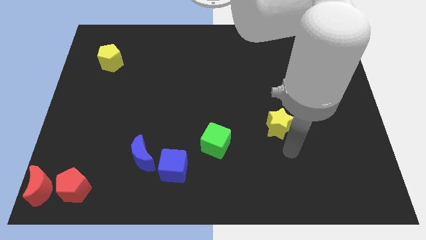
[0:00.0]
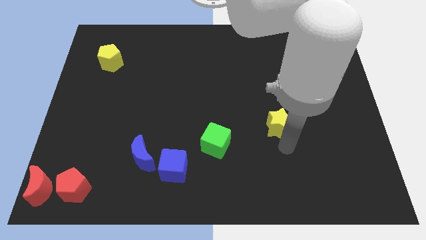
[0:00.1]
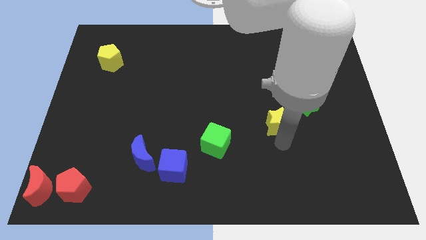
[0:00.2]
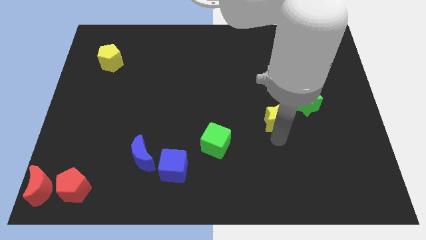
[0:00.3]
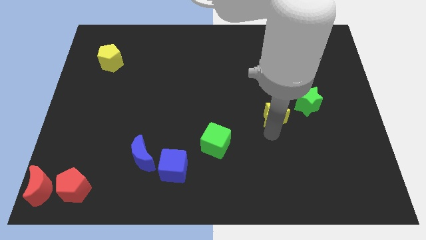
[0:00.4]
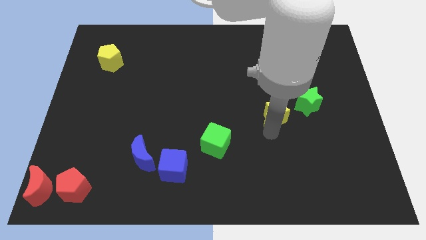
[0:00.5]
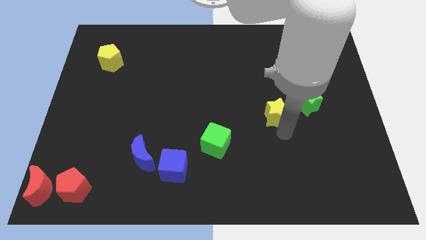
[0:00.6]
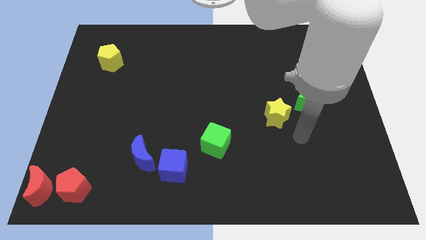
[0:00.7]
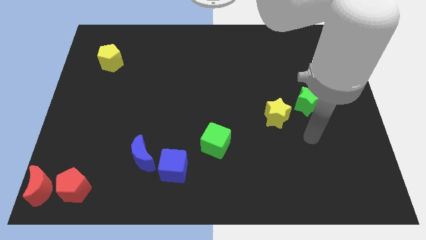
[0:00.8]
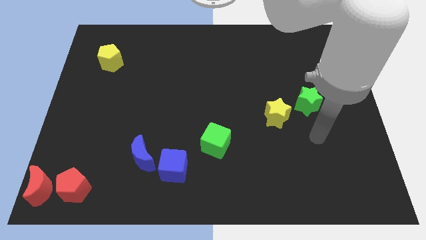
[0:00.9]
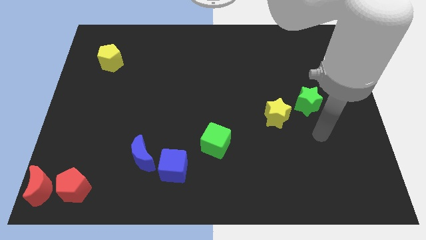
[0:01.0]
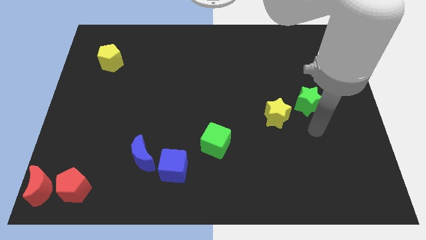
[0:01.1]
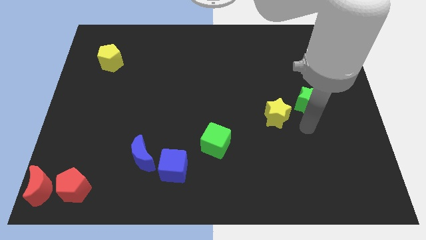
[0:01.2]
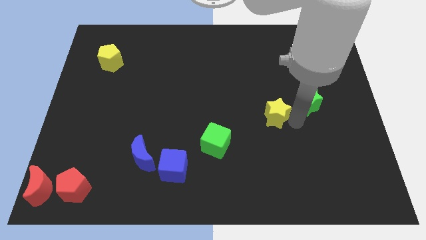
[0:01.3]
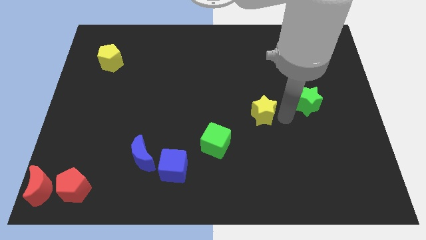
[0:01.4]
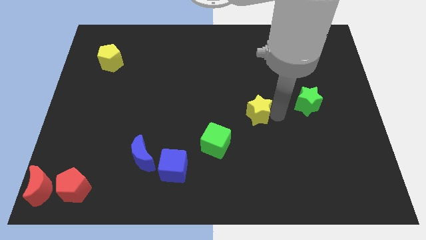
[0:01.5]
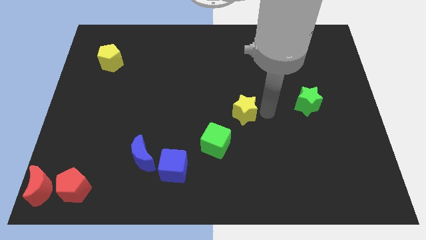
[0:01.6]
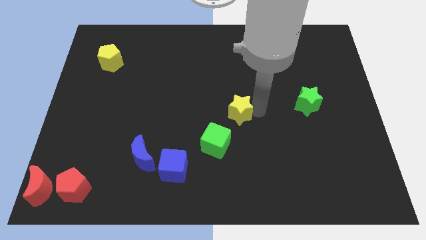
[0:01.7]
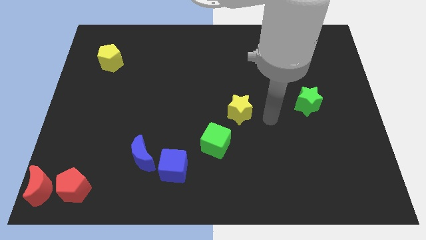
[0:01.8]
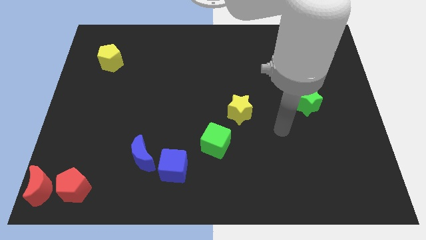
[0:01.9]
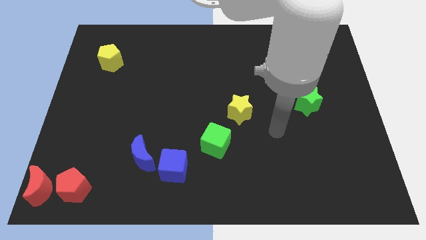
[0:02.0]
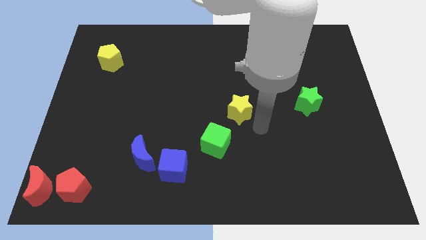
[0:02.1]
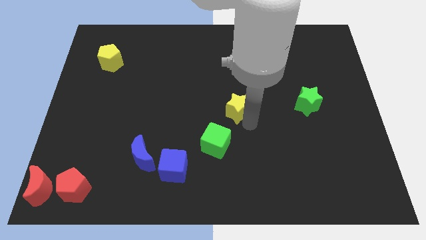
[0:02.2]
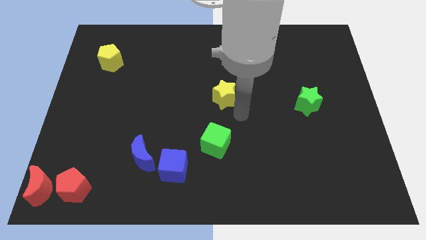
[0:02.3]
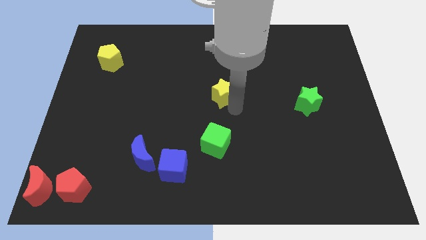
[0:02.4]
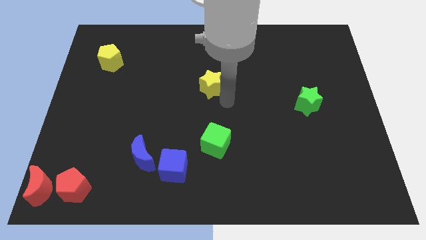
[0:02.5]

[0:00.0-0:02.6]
move the yellow star to the top side of the green cube

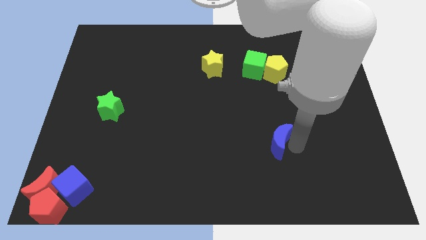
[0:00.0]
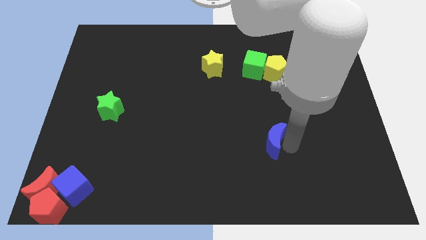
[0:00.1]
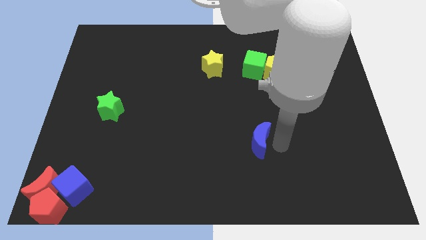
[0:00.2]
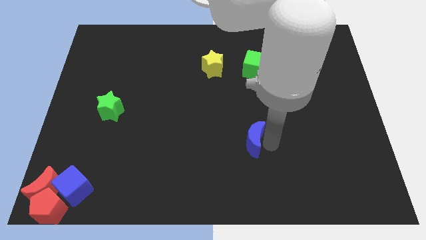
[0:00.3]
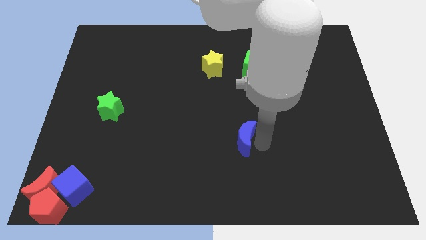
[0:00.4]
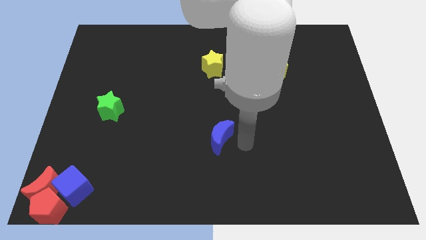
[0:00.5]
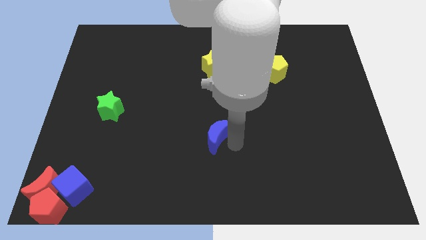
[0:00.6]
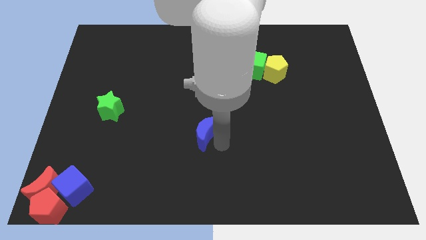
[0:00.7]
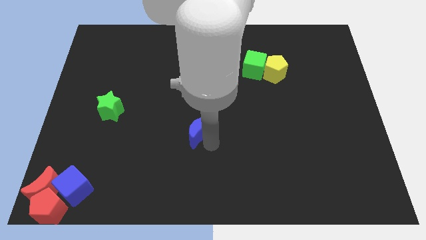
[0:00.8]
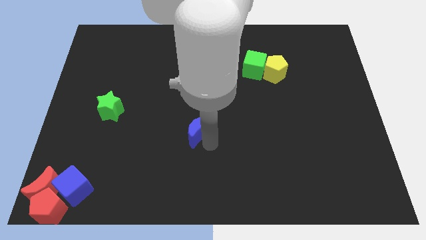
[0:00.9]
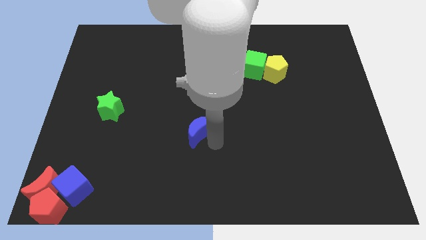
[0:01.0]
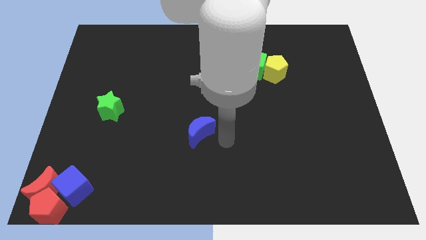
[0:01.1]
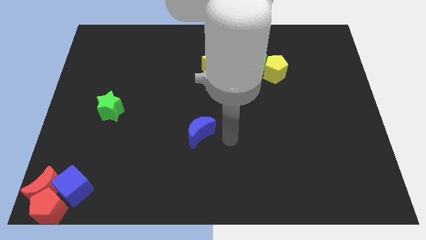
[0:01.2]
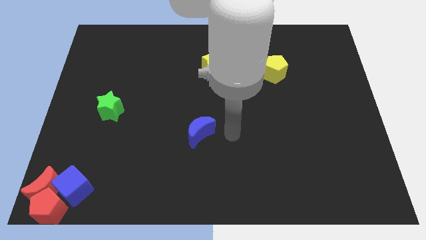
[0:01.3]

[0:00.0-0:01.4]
place the blue crescent at the center of the board

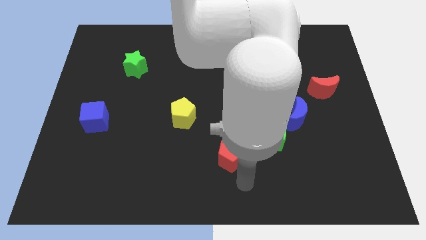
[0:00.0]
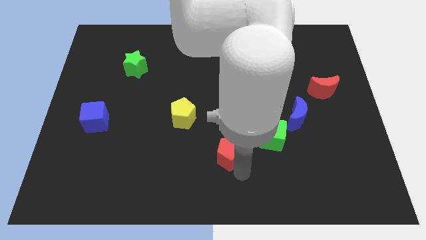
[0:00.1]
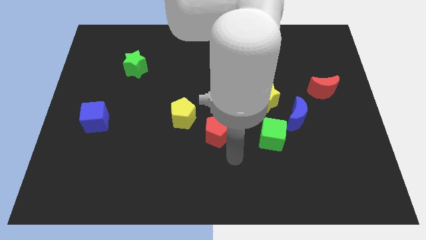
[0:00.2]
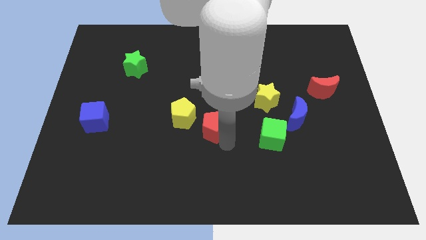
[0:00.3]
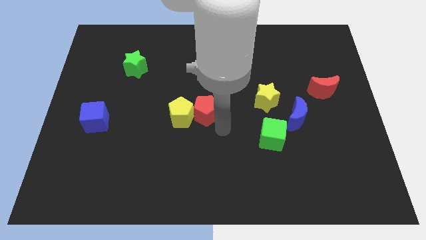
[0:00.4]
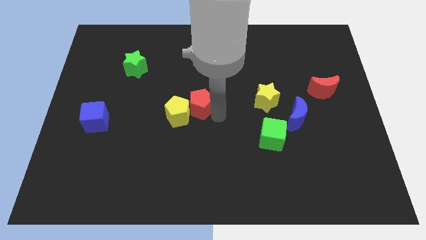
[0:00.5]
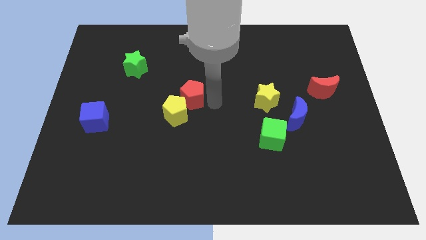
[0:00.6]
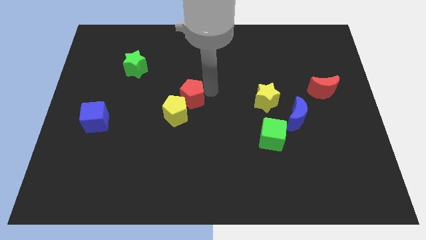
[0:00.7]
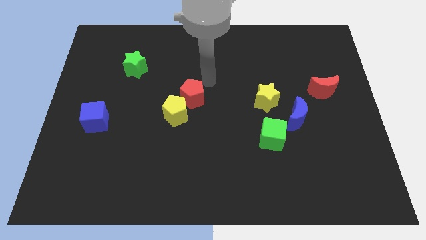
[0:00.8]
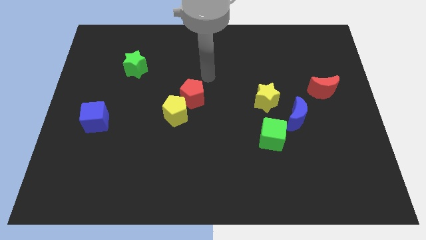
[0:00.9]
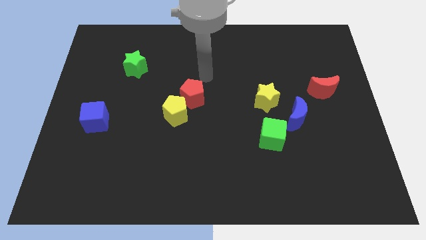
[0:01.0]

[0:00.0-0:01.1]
slide red pentagon into yellow pentagon

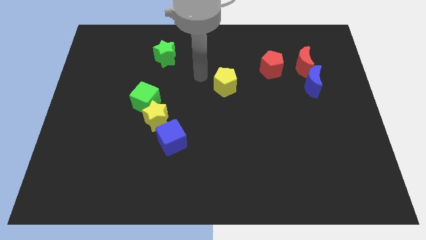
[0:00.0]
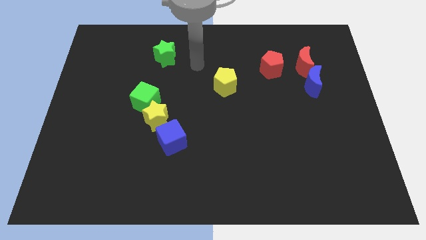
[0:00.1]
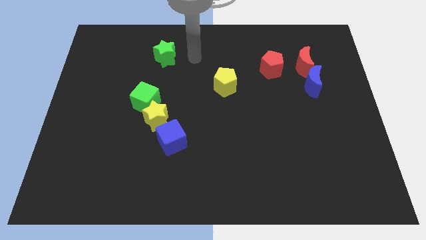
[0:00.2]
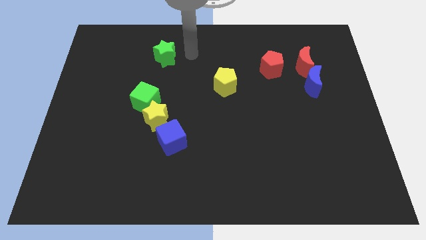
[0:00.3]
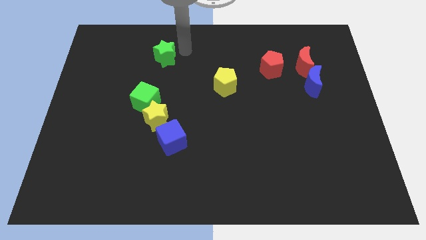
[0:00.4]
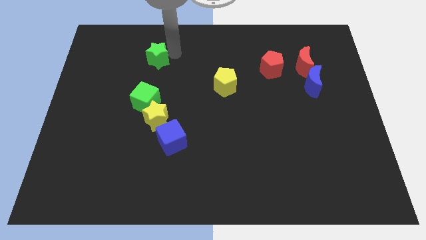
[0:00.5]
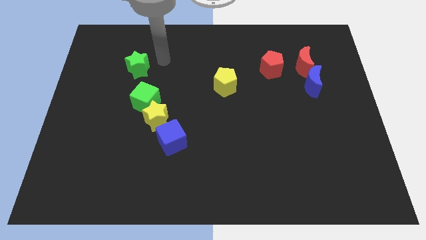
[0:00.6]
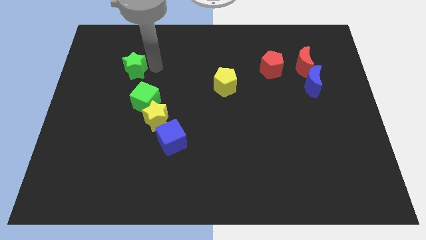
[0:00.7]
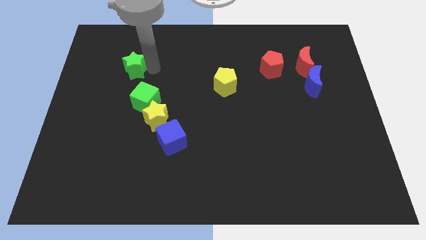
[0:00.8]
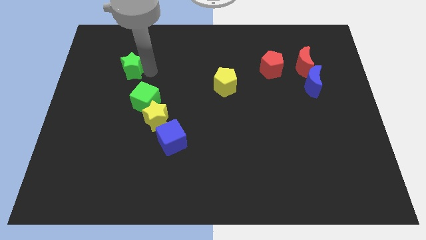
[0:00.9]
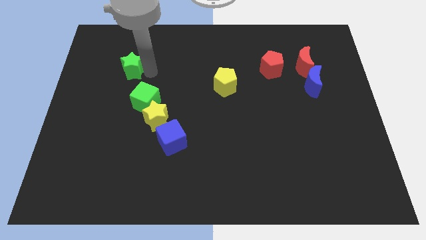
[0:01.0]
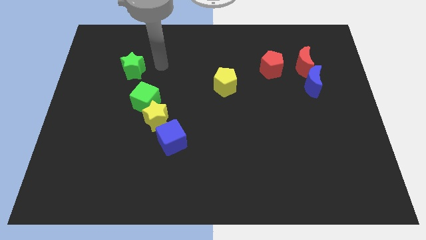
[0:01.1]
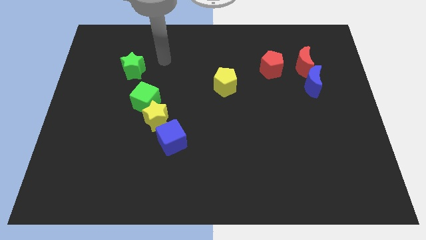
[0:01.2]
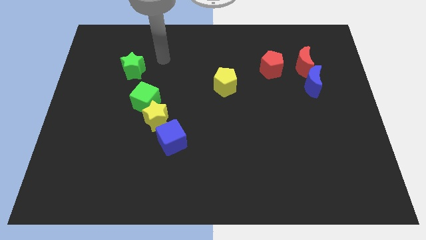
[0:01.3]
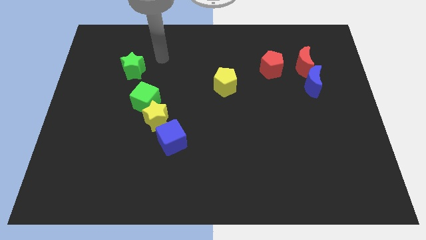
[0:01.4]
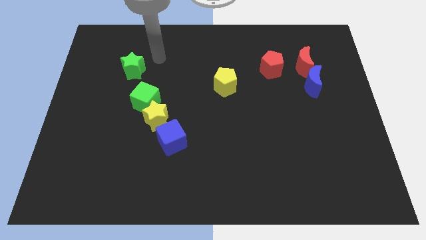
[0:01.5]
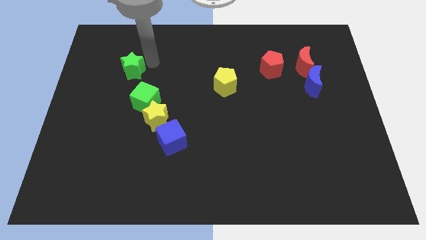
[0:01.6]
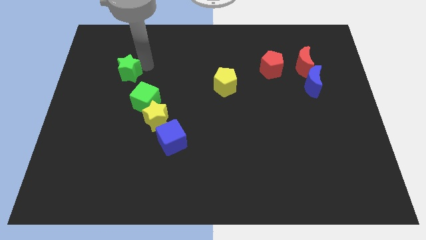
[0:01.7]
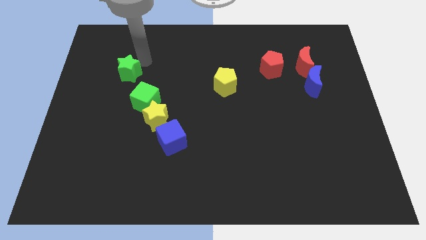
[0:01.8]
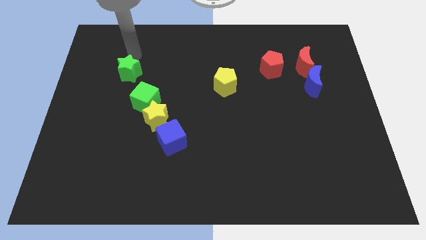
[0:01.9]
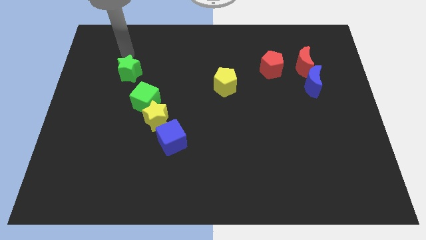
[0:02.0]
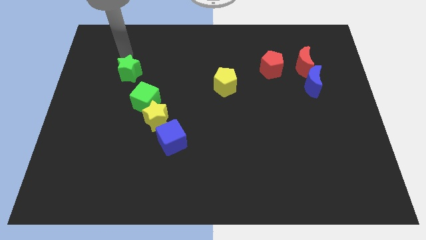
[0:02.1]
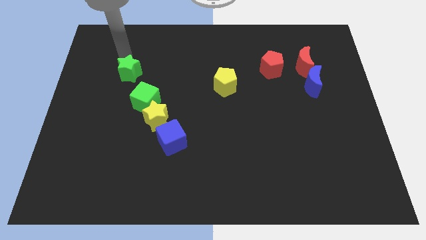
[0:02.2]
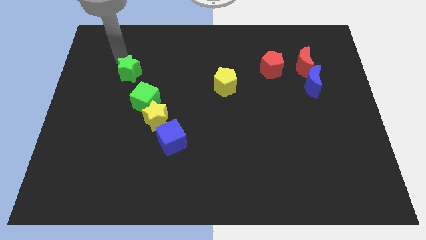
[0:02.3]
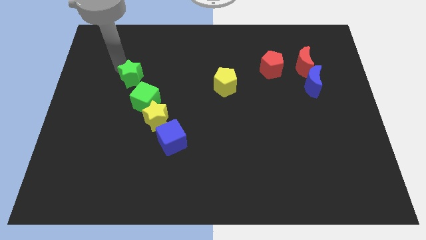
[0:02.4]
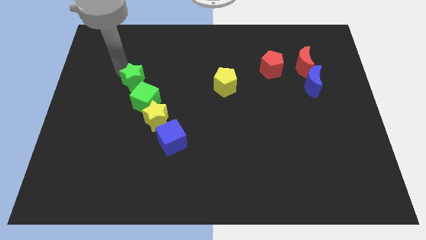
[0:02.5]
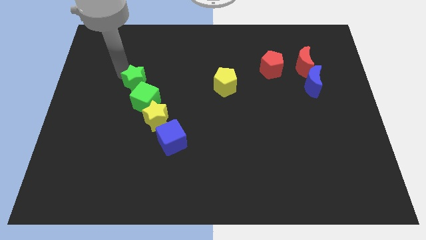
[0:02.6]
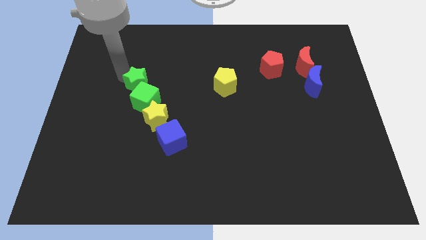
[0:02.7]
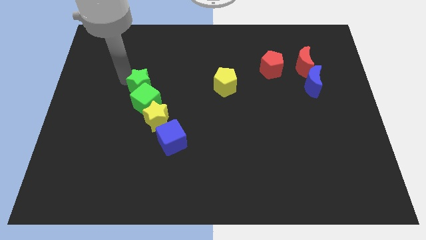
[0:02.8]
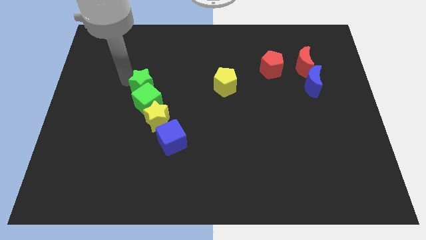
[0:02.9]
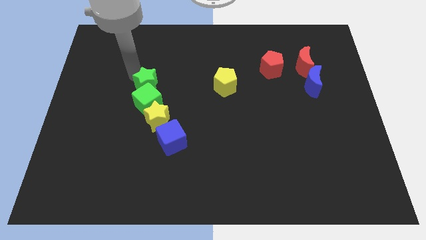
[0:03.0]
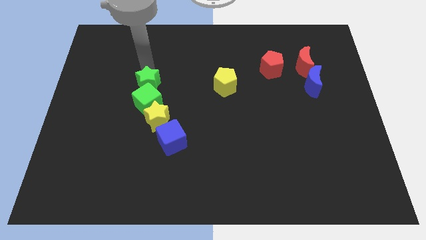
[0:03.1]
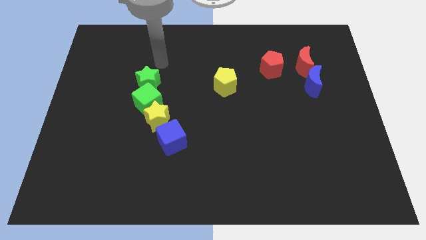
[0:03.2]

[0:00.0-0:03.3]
place the green star on the top of green cube

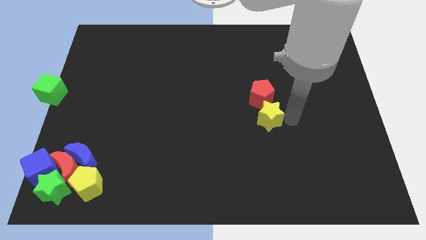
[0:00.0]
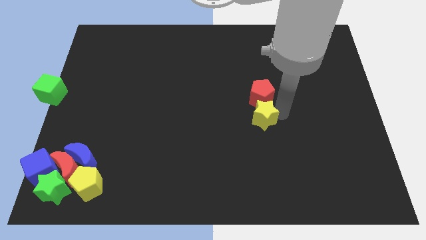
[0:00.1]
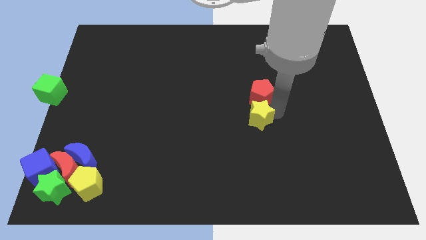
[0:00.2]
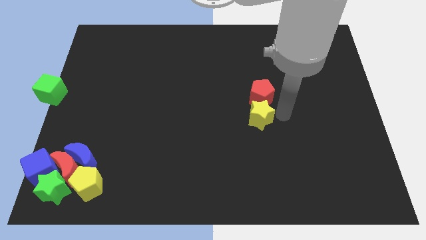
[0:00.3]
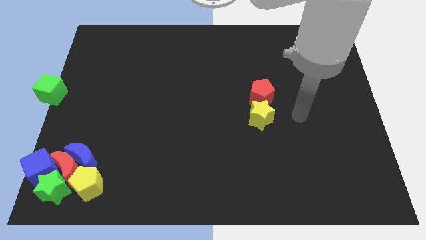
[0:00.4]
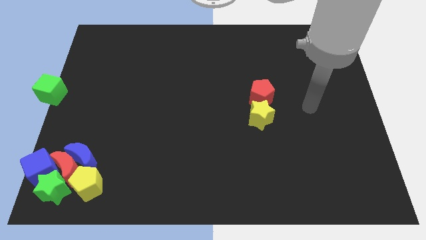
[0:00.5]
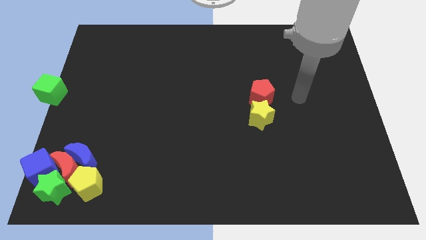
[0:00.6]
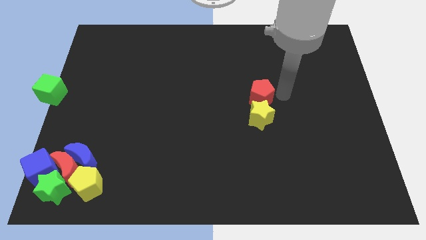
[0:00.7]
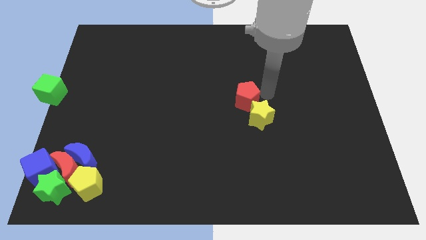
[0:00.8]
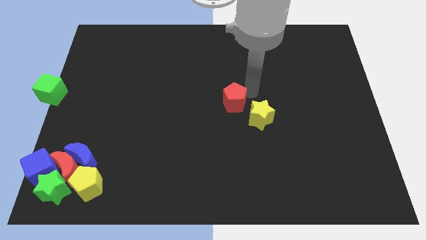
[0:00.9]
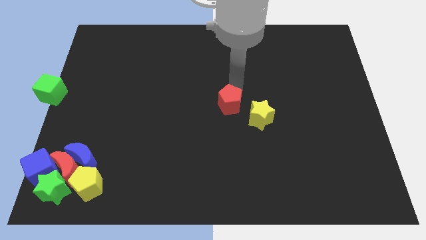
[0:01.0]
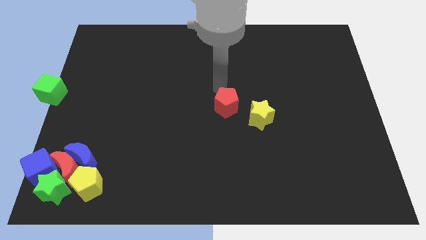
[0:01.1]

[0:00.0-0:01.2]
separate the red pentagon from the yellow star
